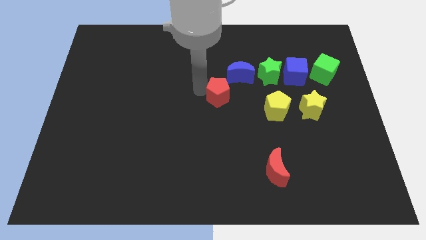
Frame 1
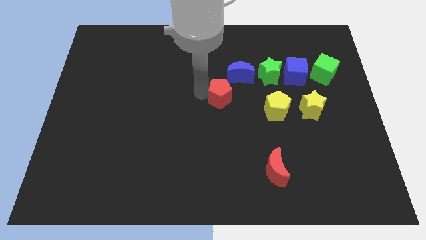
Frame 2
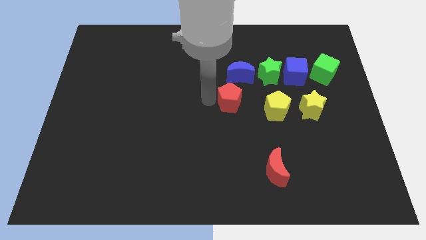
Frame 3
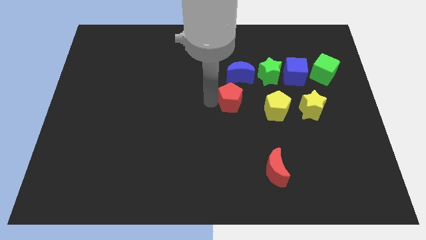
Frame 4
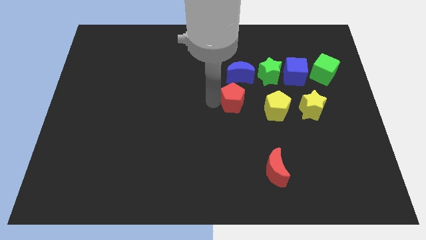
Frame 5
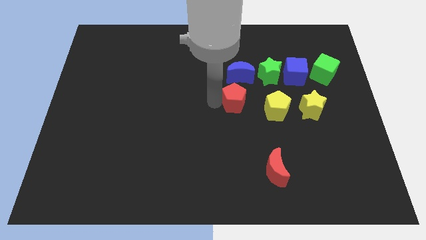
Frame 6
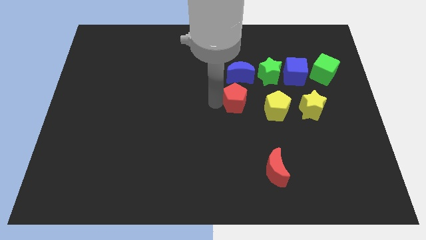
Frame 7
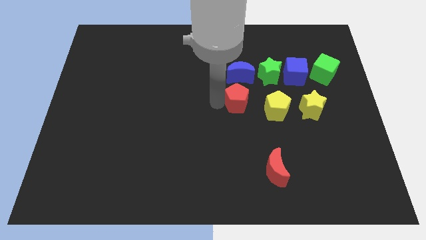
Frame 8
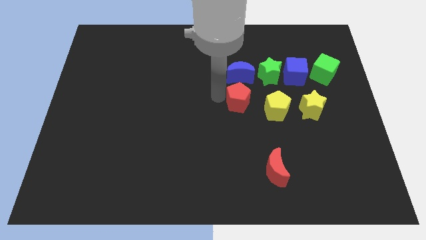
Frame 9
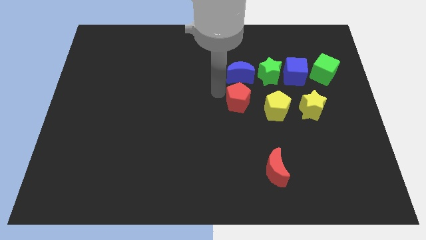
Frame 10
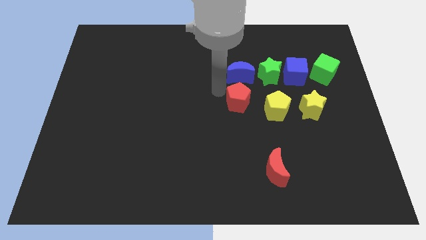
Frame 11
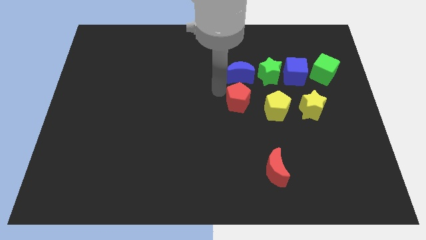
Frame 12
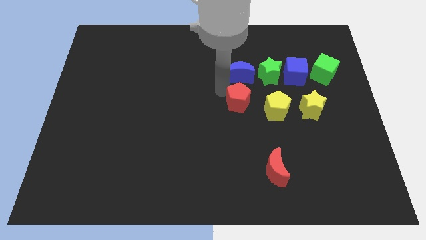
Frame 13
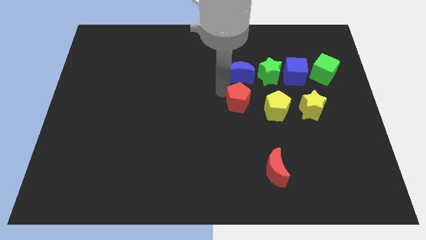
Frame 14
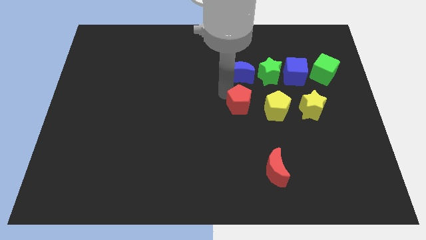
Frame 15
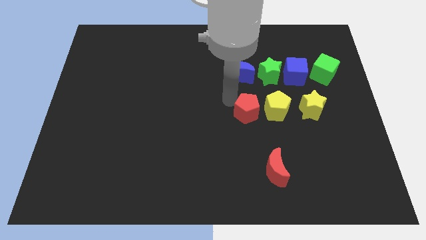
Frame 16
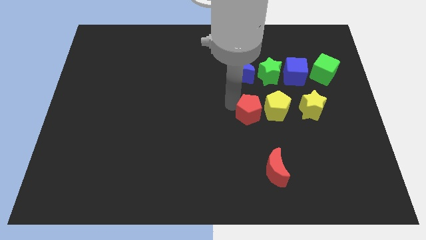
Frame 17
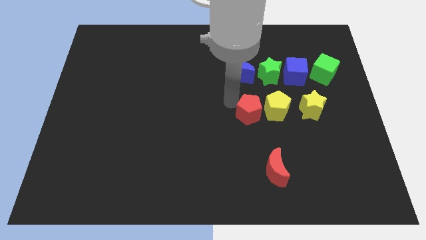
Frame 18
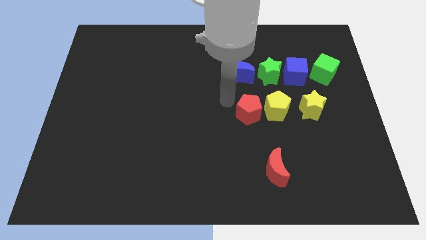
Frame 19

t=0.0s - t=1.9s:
place the red pentagon to the left side of the yellow pentagon

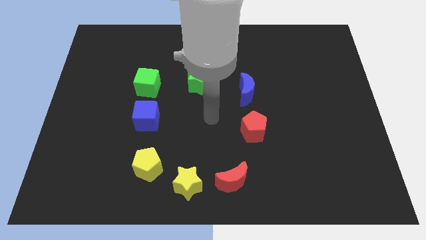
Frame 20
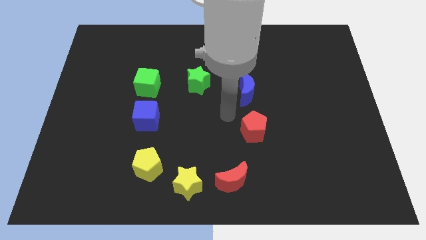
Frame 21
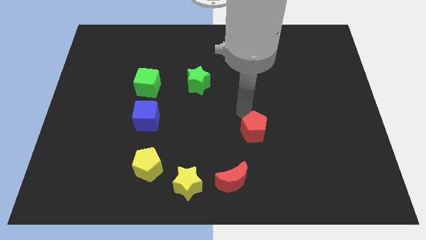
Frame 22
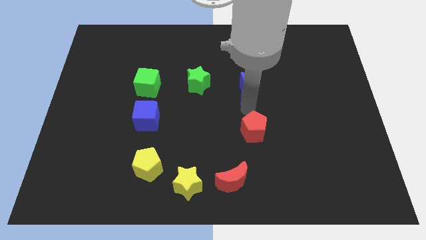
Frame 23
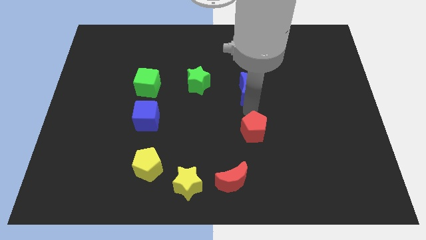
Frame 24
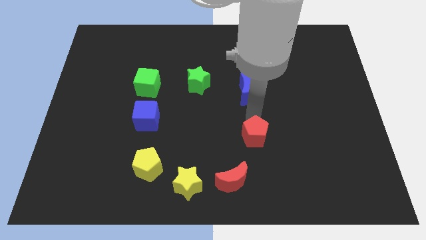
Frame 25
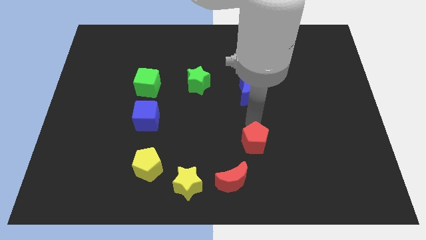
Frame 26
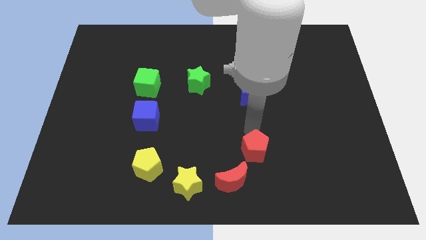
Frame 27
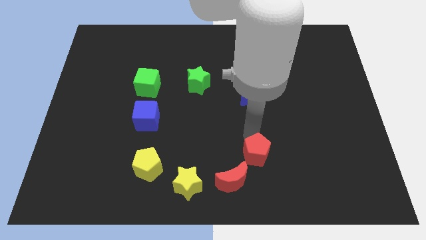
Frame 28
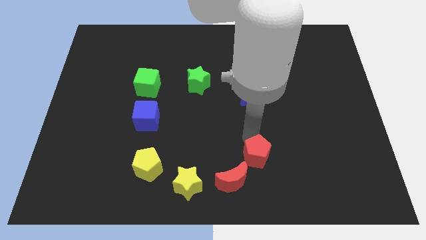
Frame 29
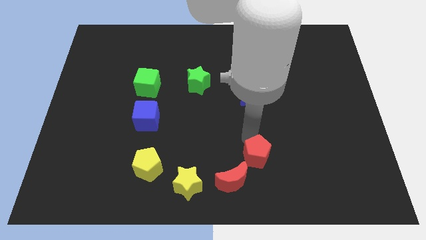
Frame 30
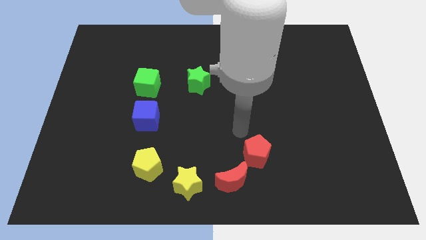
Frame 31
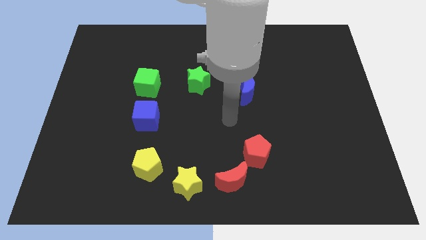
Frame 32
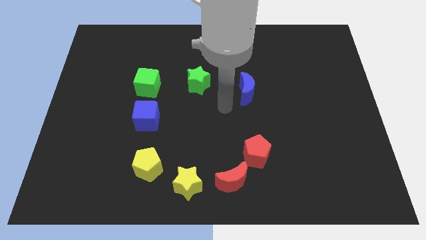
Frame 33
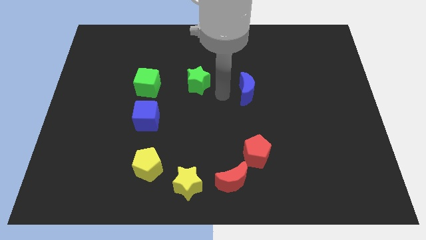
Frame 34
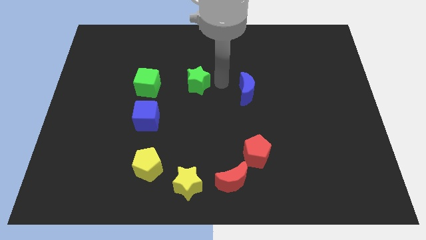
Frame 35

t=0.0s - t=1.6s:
push the red pentagon diagonally top right to the red moon

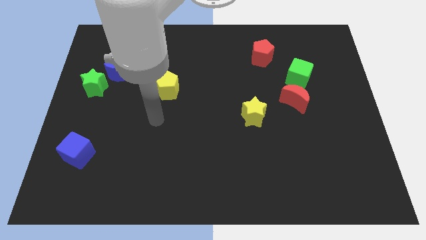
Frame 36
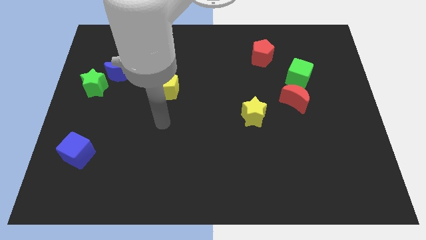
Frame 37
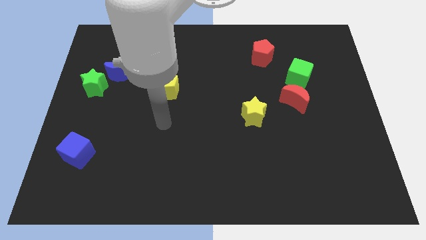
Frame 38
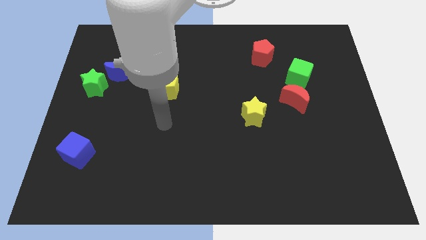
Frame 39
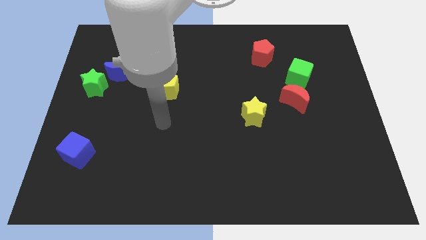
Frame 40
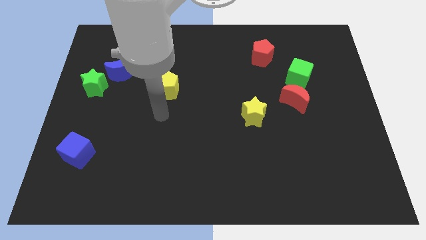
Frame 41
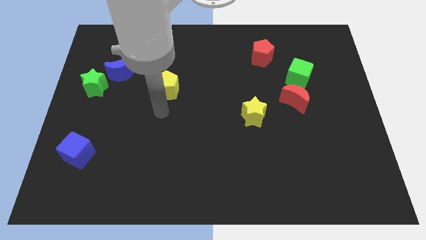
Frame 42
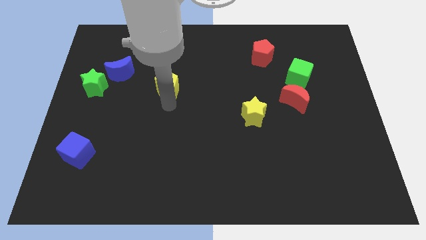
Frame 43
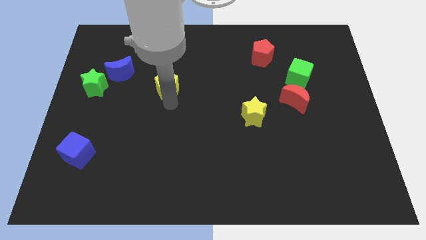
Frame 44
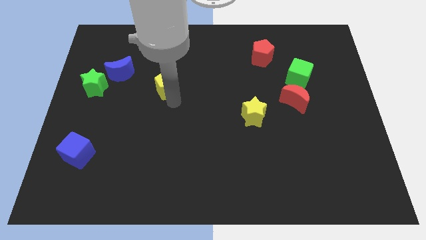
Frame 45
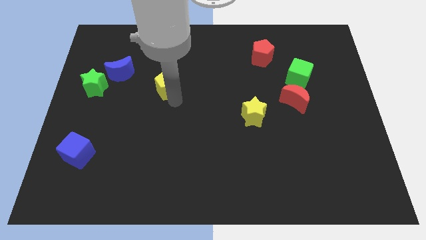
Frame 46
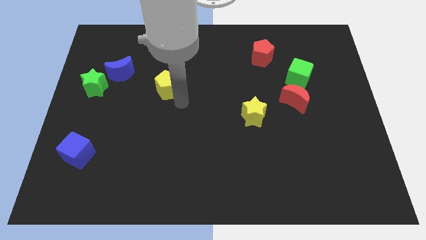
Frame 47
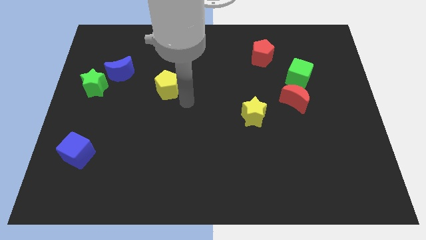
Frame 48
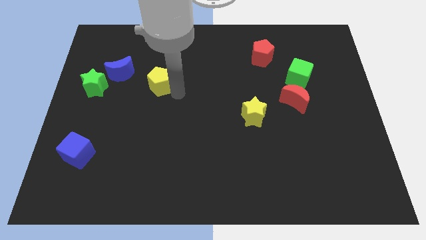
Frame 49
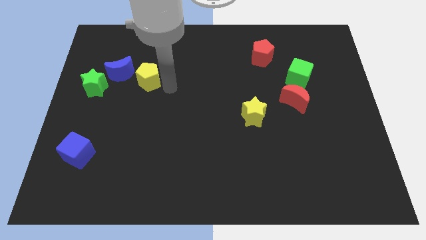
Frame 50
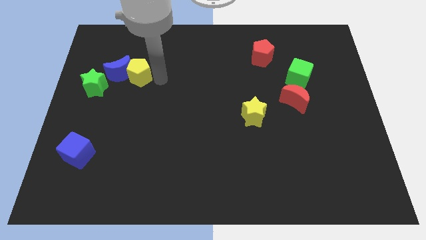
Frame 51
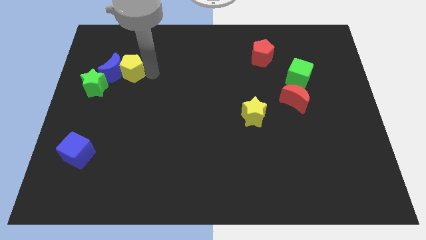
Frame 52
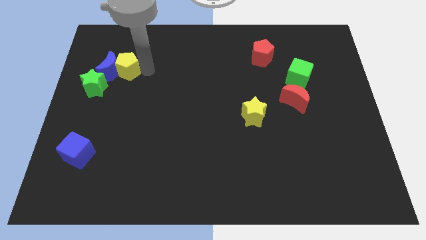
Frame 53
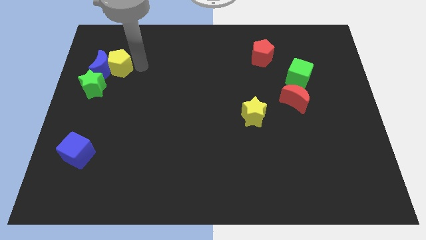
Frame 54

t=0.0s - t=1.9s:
move the yellow pentagon into the blue crescent

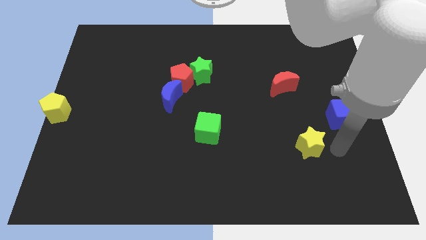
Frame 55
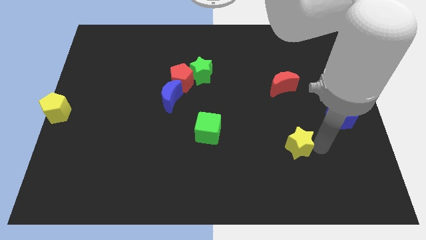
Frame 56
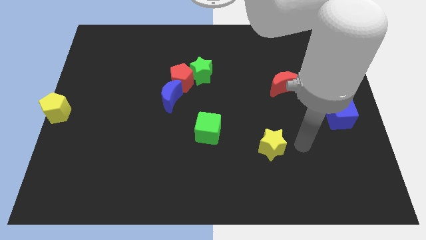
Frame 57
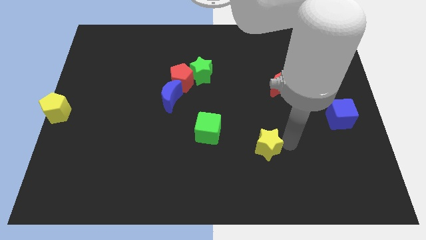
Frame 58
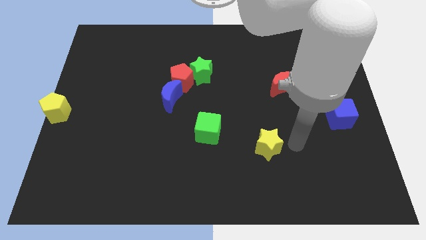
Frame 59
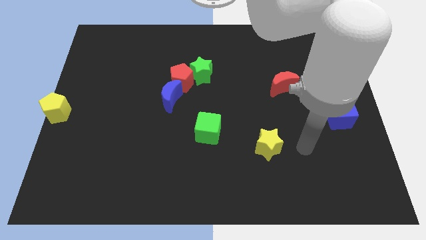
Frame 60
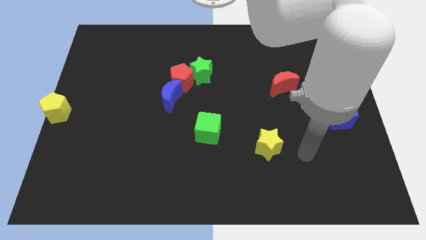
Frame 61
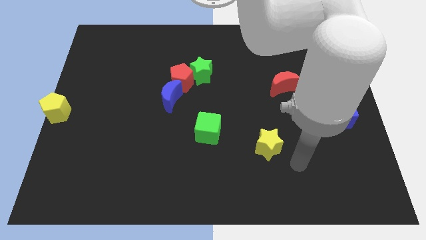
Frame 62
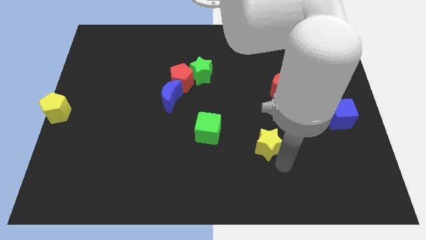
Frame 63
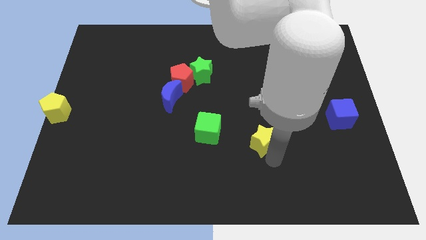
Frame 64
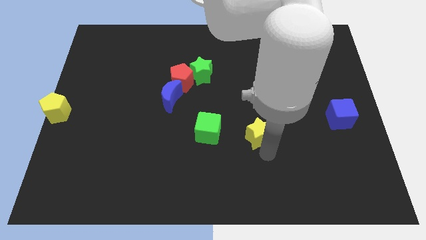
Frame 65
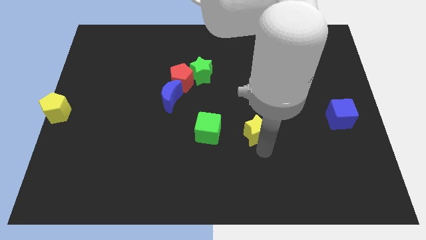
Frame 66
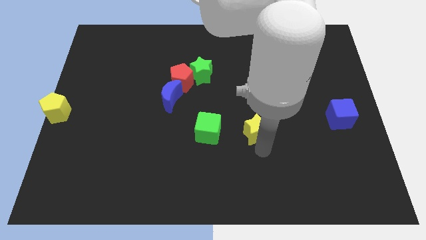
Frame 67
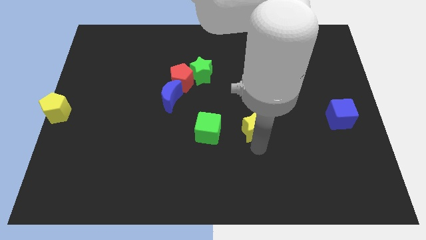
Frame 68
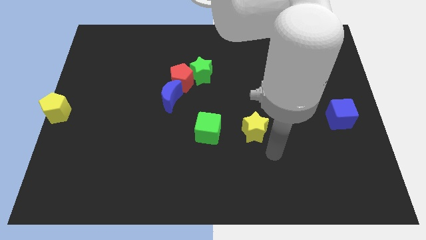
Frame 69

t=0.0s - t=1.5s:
place the yellow star to the right side of the green cube

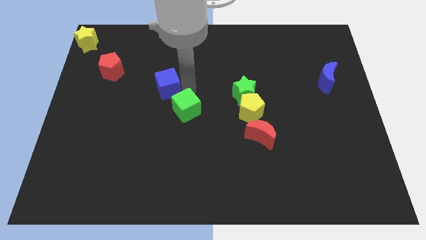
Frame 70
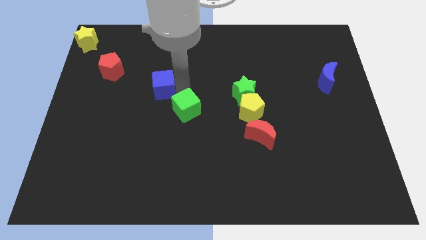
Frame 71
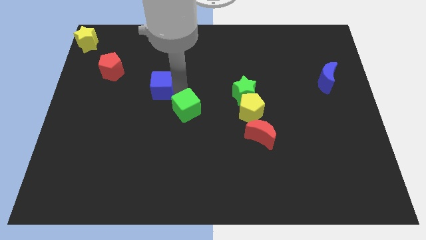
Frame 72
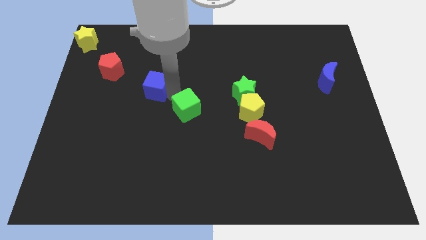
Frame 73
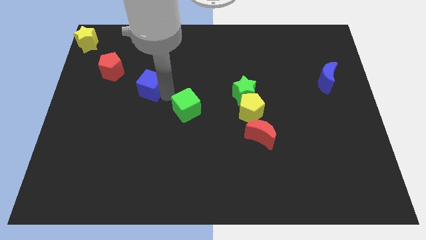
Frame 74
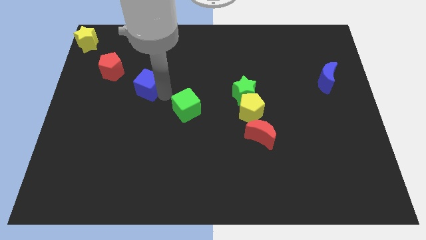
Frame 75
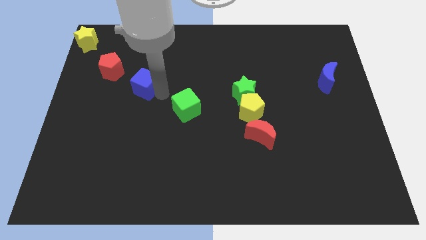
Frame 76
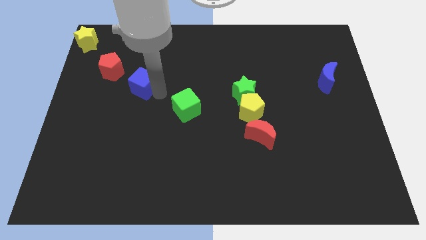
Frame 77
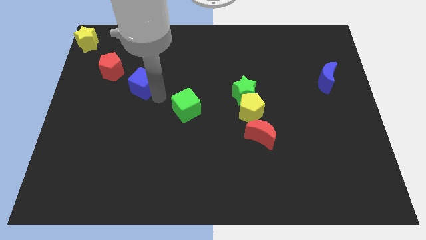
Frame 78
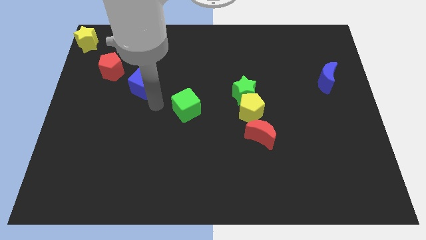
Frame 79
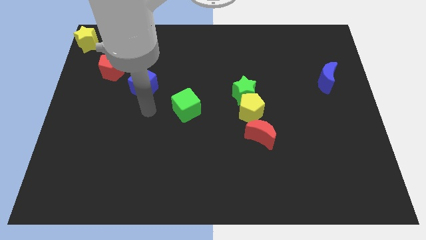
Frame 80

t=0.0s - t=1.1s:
push the blue cube slightly to the left side of the board

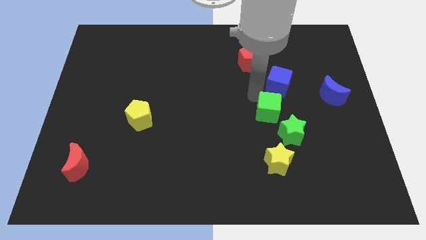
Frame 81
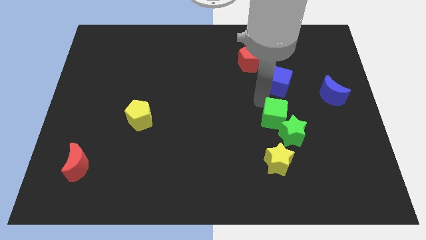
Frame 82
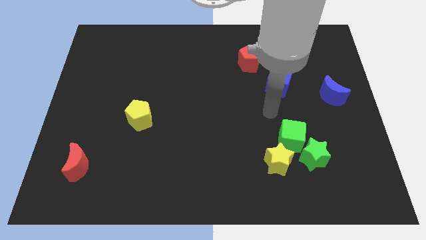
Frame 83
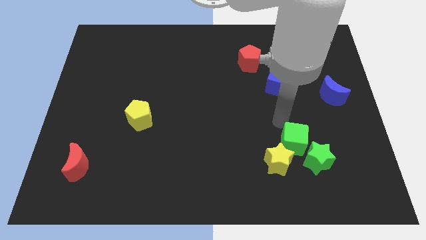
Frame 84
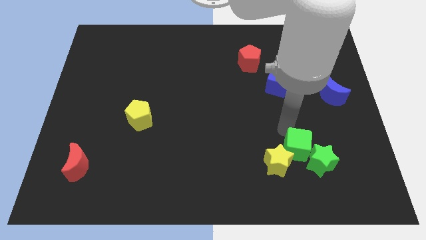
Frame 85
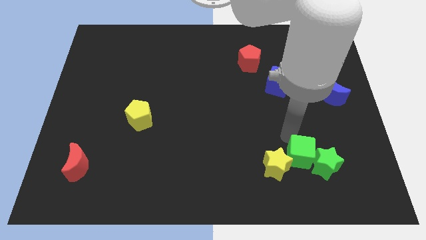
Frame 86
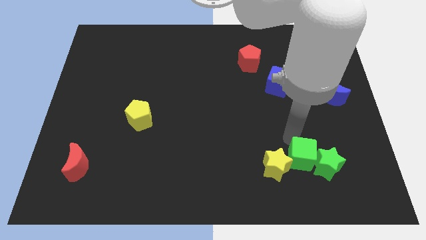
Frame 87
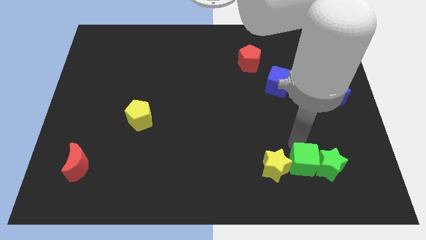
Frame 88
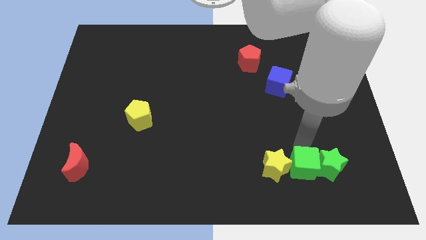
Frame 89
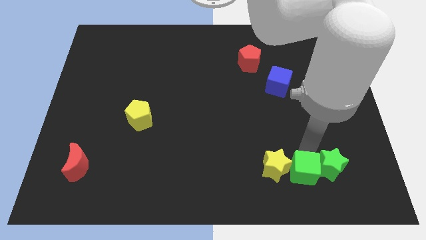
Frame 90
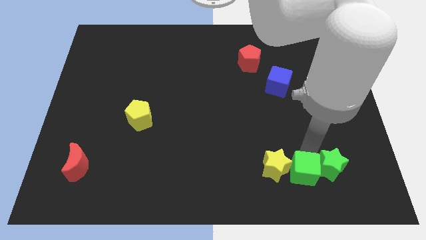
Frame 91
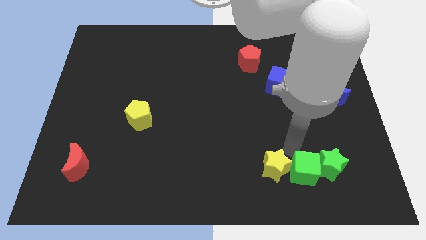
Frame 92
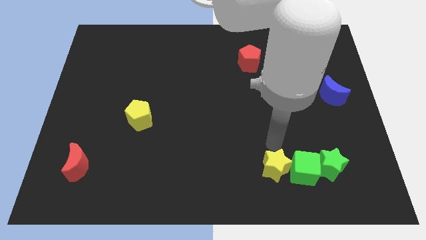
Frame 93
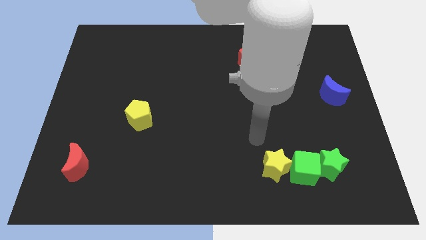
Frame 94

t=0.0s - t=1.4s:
place the green cube between green star and yellow star
